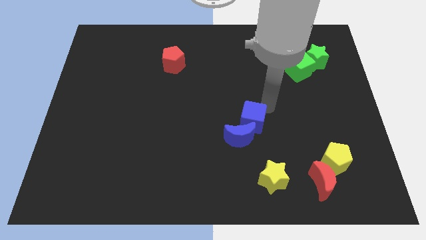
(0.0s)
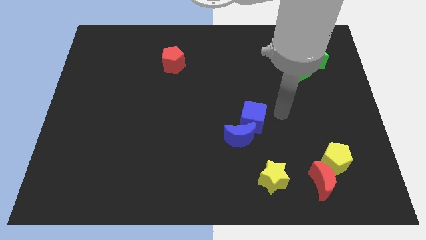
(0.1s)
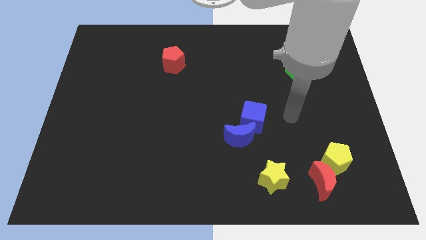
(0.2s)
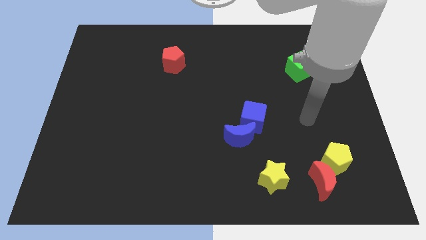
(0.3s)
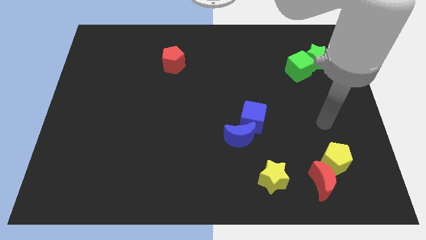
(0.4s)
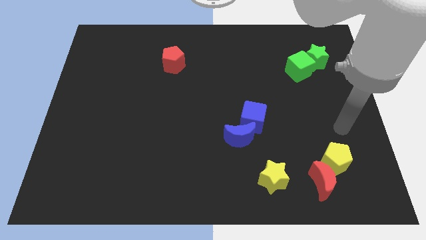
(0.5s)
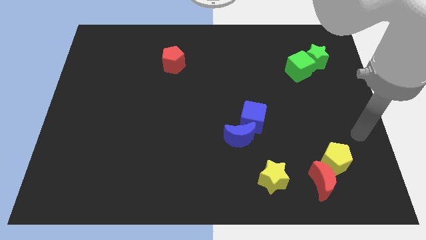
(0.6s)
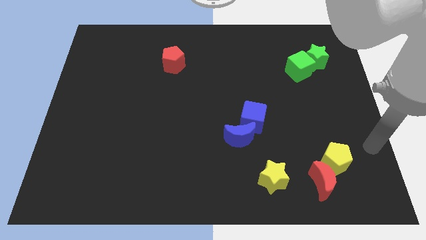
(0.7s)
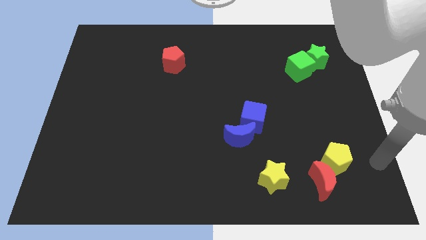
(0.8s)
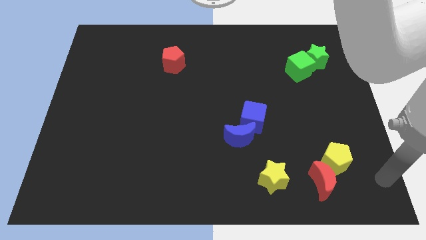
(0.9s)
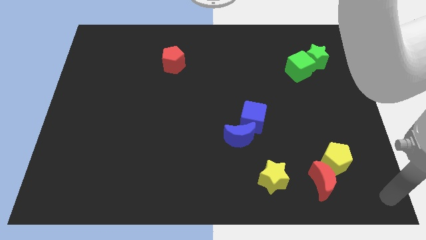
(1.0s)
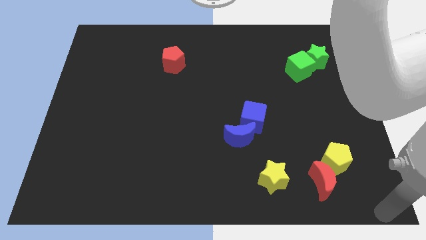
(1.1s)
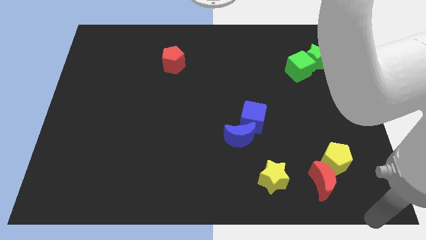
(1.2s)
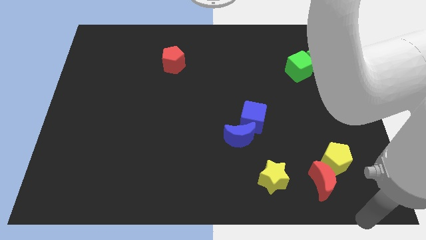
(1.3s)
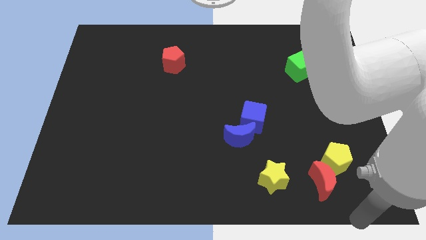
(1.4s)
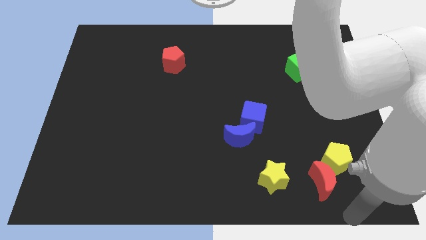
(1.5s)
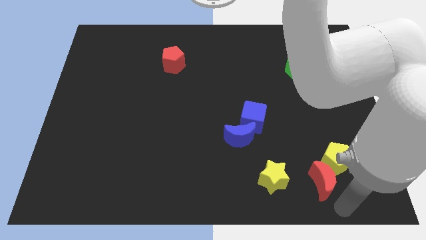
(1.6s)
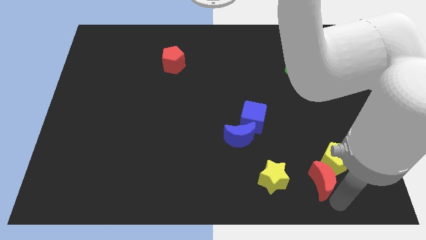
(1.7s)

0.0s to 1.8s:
point your hand at the bottom right corner

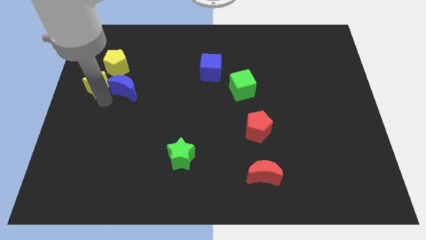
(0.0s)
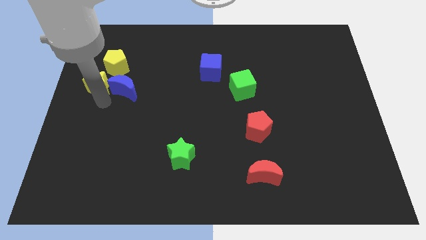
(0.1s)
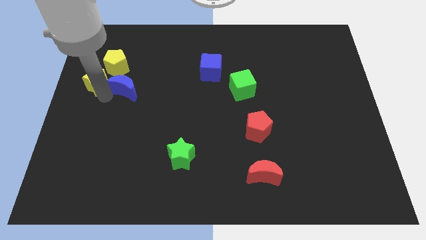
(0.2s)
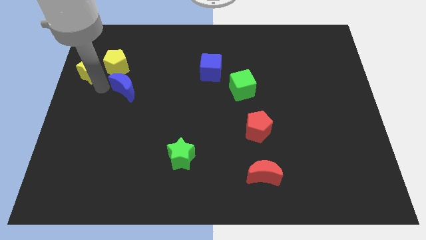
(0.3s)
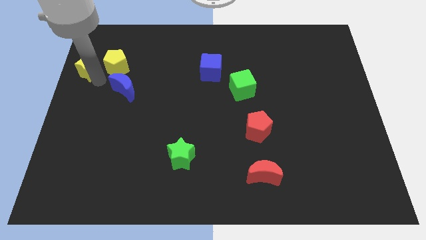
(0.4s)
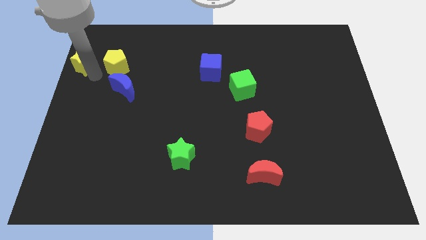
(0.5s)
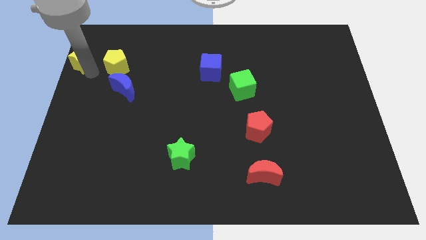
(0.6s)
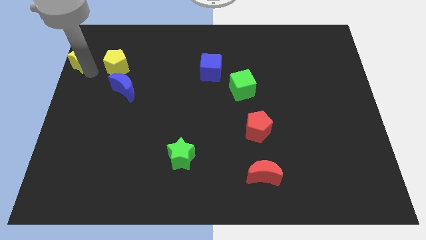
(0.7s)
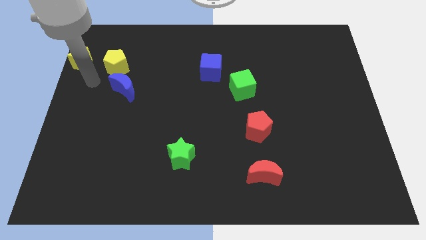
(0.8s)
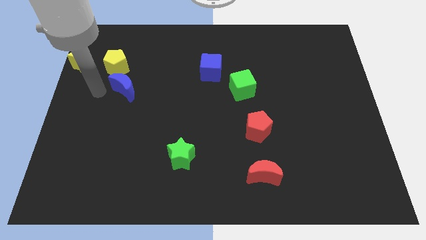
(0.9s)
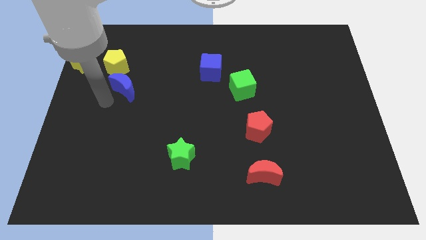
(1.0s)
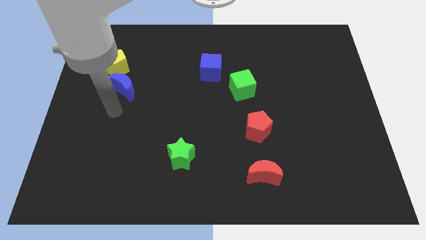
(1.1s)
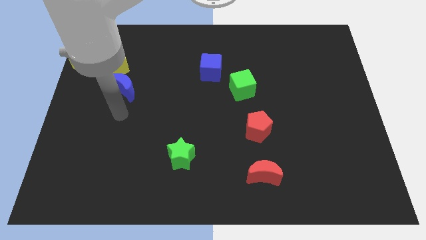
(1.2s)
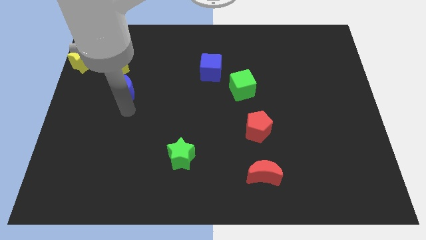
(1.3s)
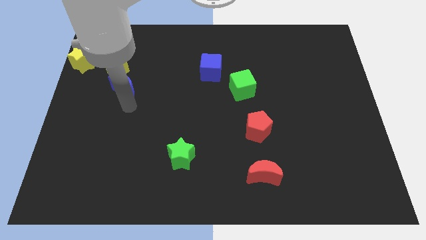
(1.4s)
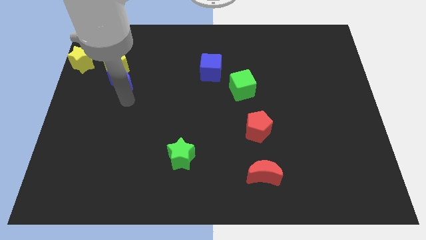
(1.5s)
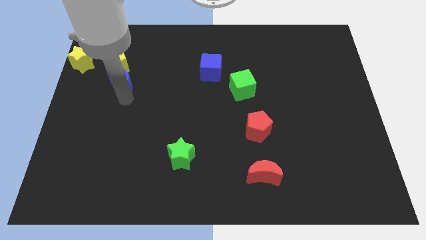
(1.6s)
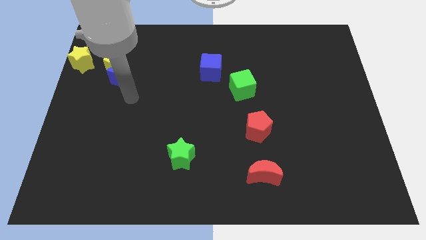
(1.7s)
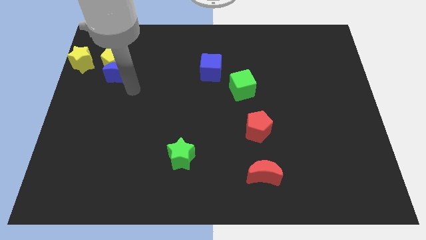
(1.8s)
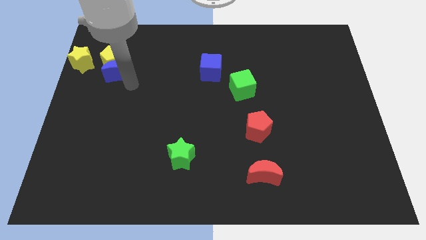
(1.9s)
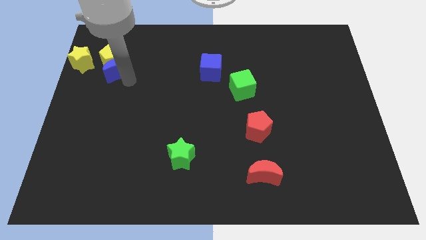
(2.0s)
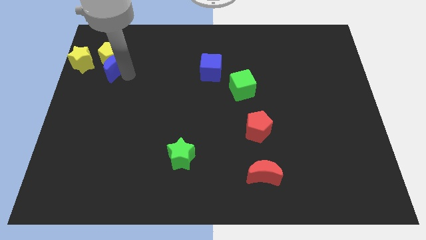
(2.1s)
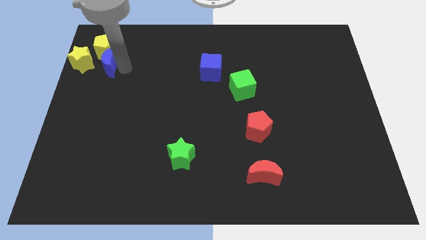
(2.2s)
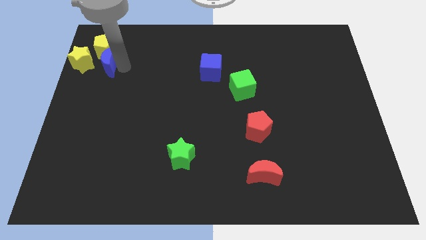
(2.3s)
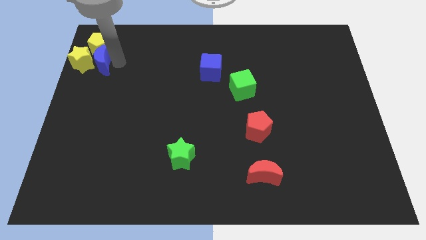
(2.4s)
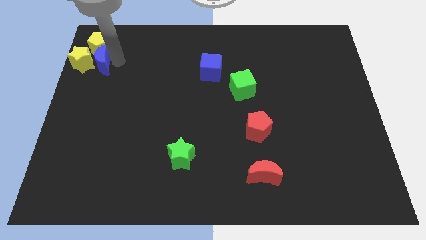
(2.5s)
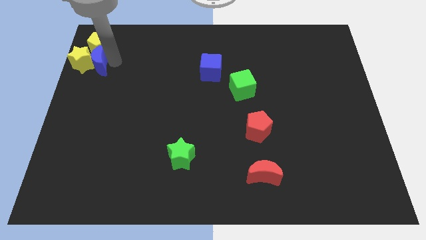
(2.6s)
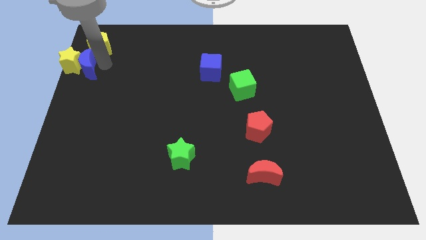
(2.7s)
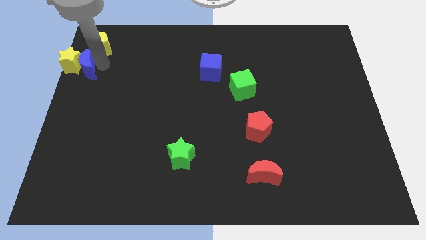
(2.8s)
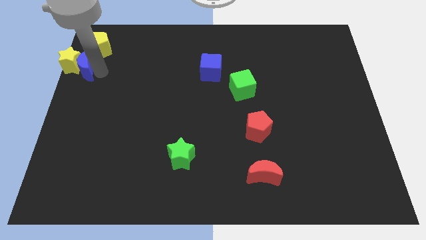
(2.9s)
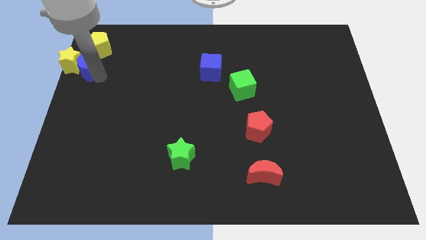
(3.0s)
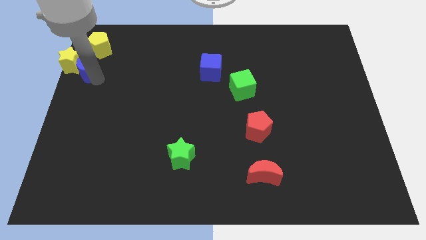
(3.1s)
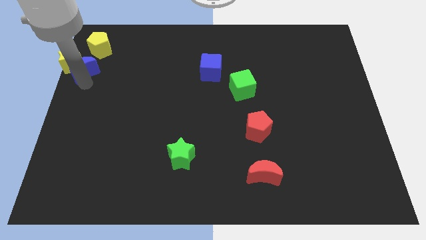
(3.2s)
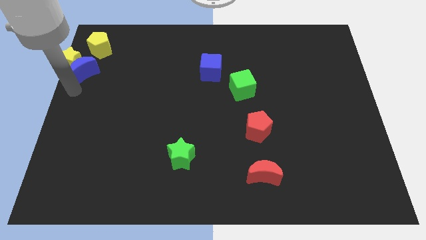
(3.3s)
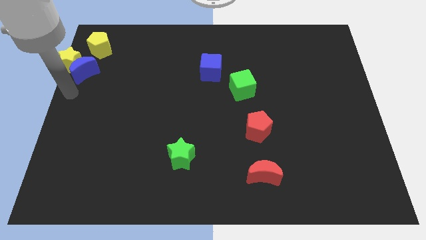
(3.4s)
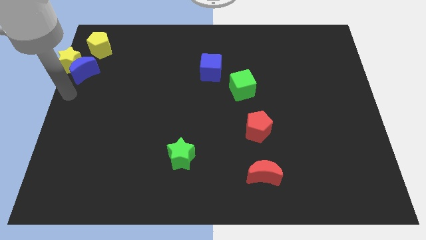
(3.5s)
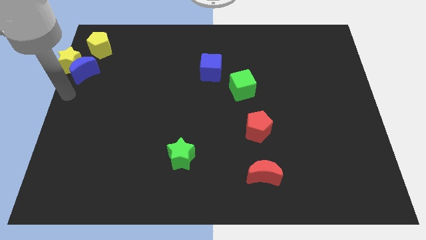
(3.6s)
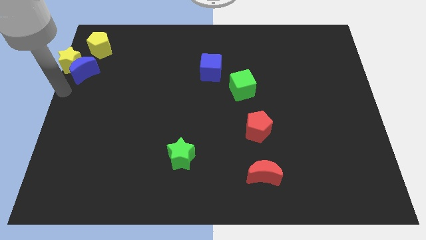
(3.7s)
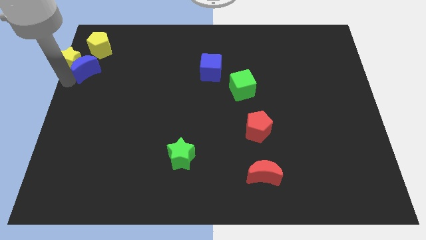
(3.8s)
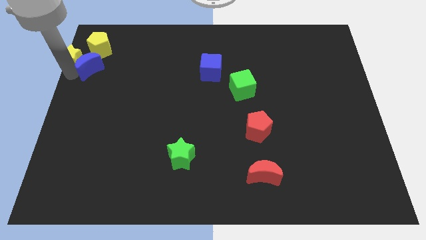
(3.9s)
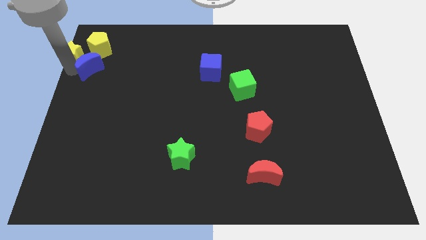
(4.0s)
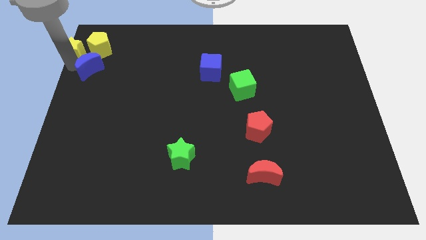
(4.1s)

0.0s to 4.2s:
drag both the yellow blocks and blue crescent towards the top left side of the board

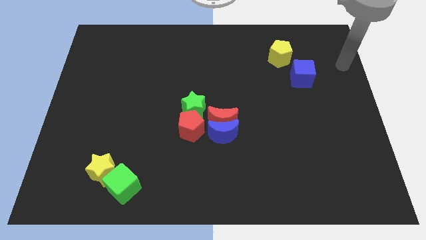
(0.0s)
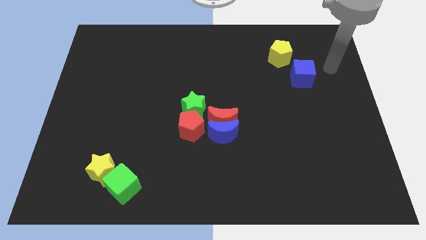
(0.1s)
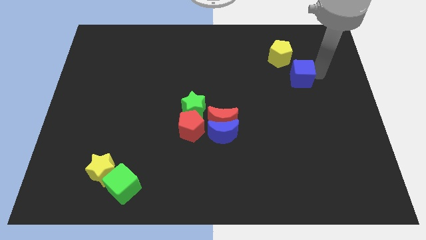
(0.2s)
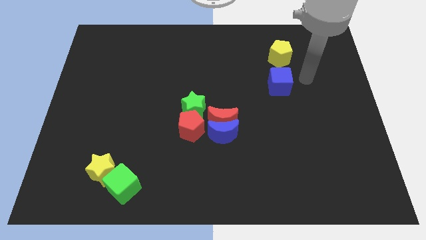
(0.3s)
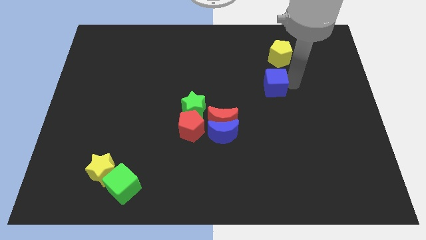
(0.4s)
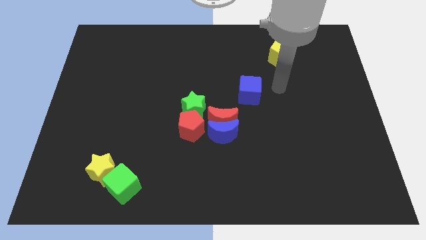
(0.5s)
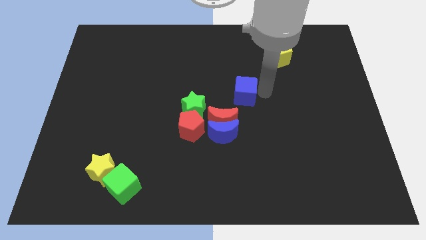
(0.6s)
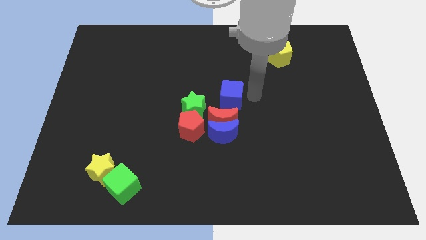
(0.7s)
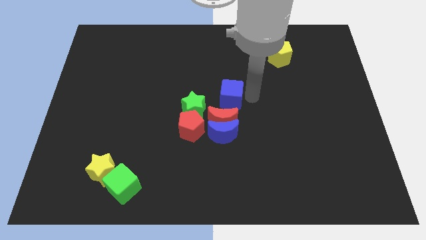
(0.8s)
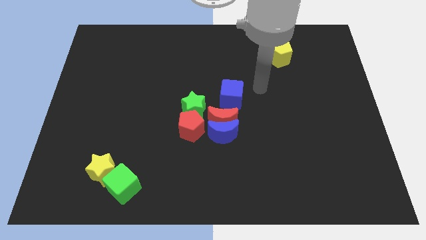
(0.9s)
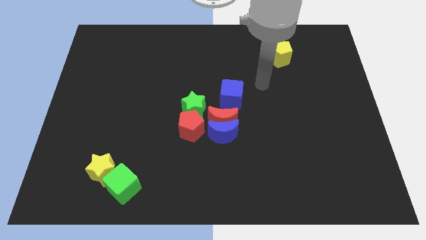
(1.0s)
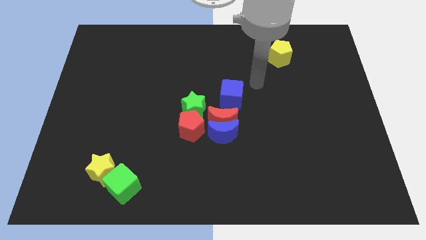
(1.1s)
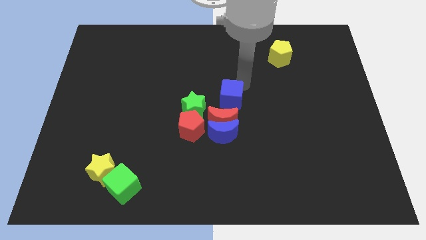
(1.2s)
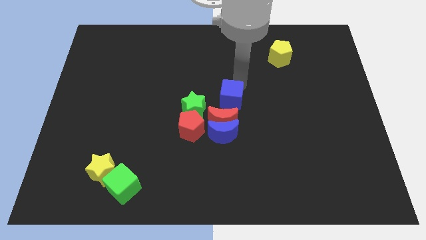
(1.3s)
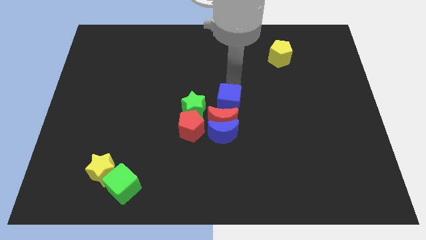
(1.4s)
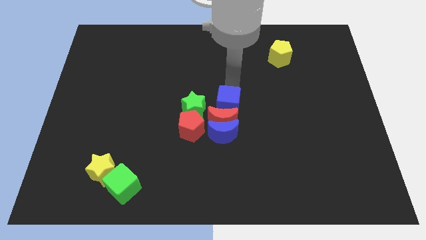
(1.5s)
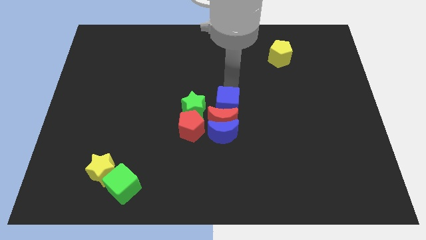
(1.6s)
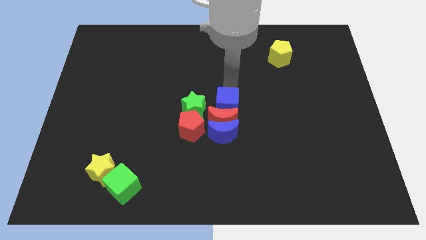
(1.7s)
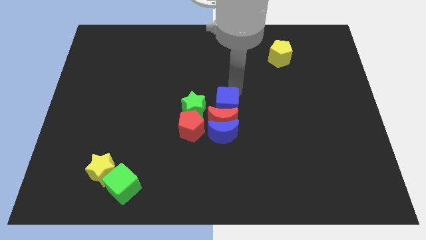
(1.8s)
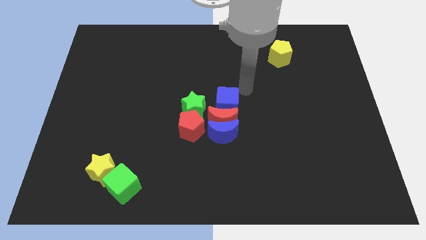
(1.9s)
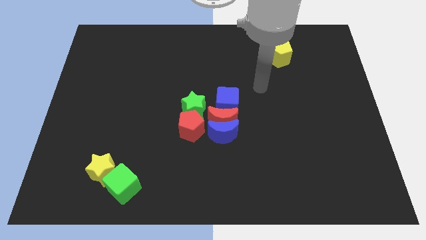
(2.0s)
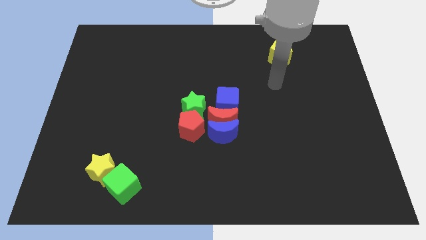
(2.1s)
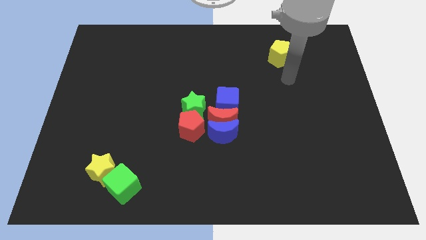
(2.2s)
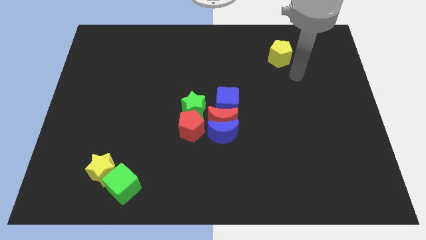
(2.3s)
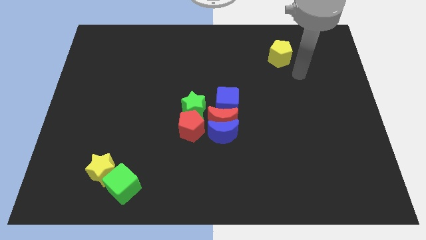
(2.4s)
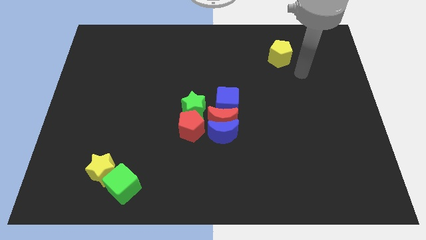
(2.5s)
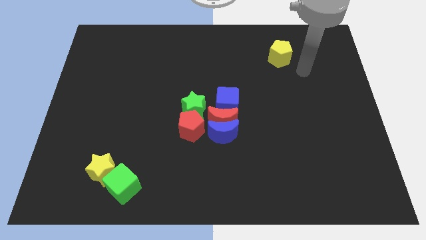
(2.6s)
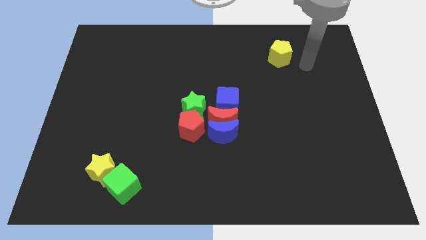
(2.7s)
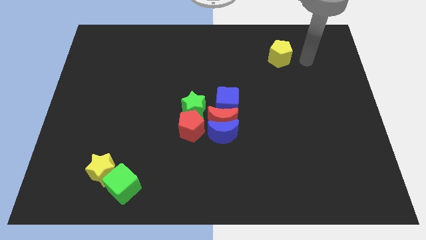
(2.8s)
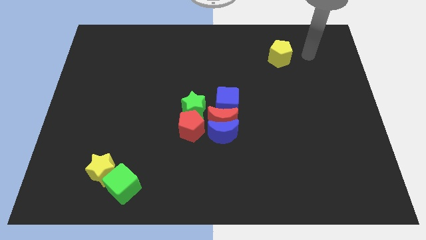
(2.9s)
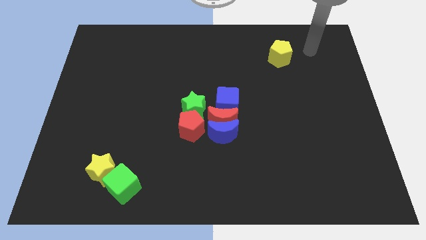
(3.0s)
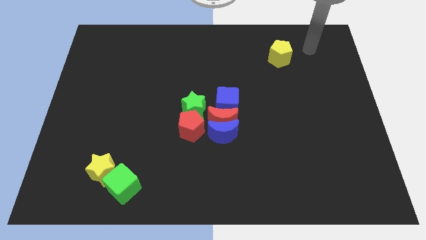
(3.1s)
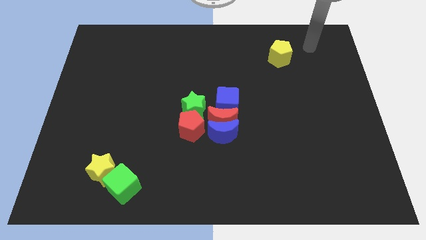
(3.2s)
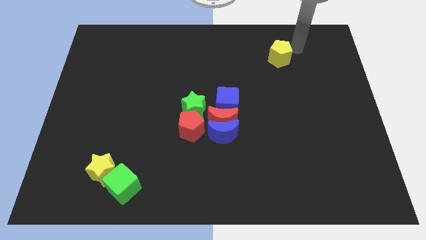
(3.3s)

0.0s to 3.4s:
move the blue cube to the top side of the red moon
